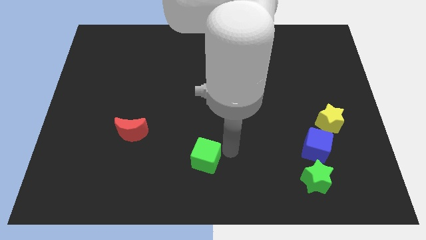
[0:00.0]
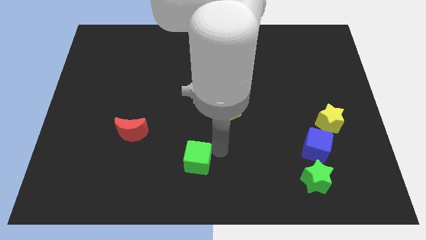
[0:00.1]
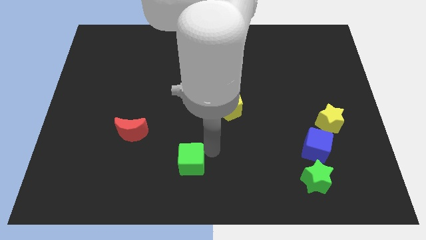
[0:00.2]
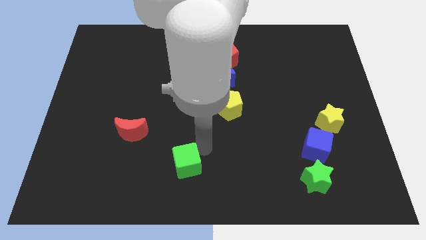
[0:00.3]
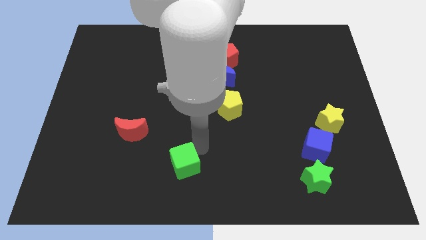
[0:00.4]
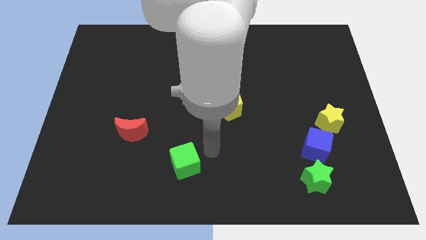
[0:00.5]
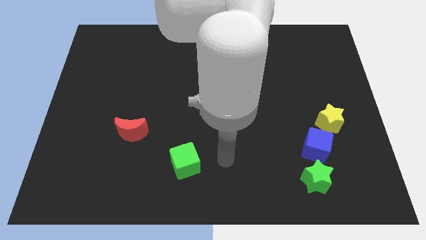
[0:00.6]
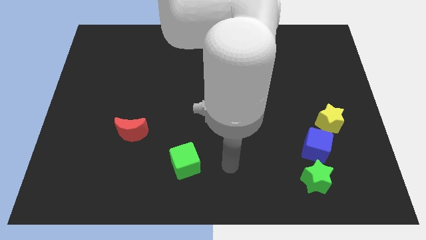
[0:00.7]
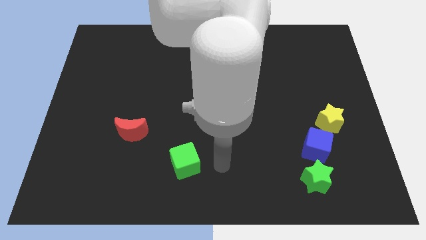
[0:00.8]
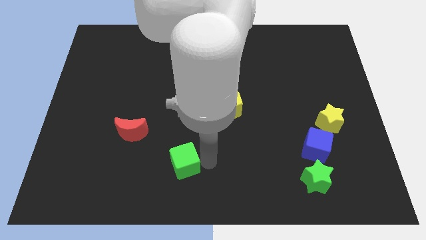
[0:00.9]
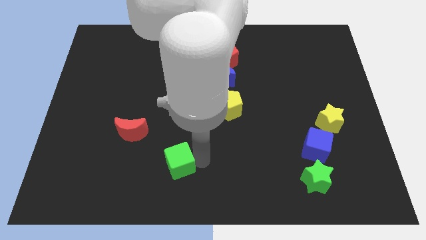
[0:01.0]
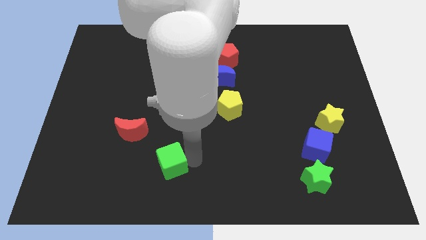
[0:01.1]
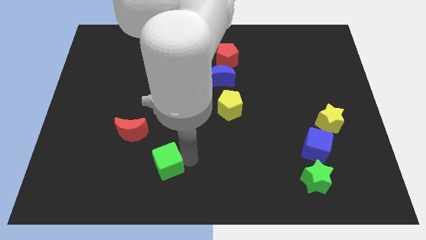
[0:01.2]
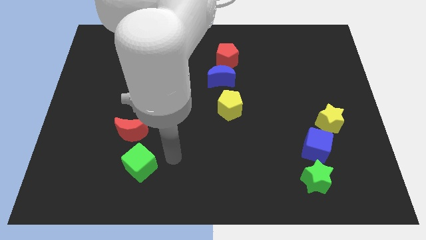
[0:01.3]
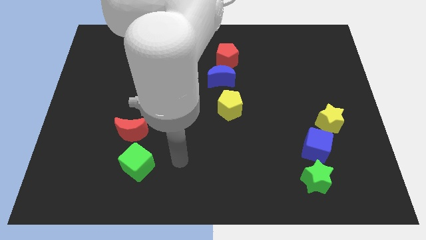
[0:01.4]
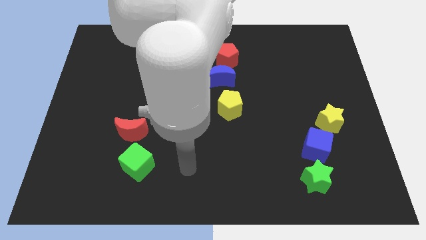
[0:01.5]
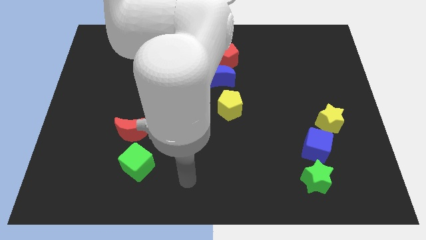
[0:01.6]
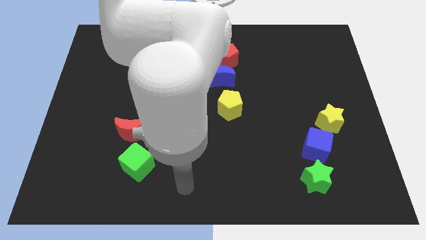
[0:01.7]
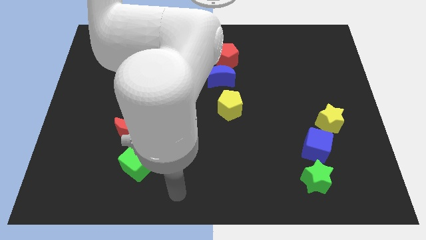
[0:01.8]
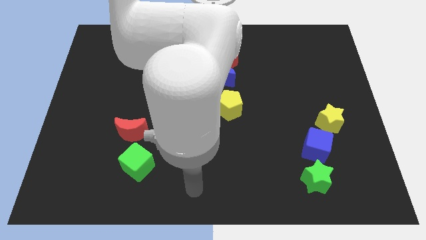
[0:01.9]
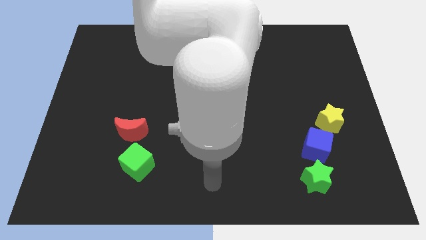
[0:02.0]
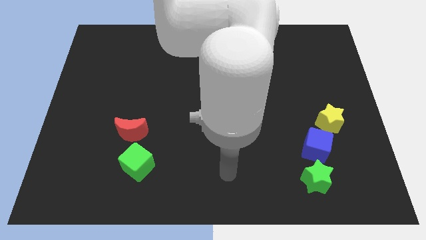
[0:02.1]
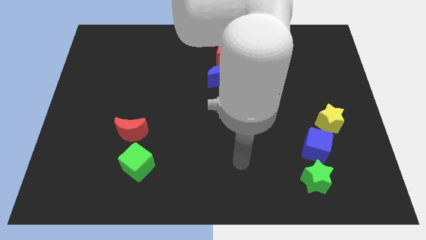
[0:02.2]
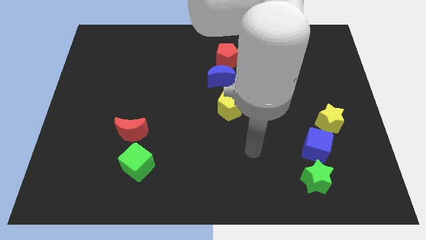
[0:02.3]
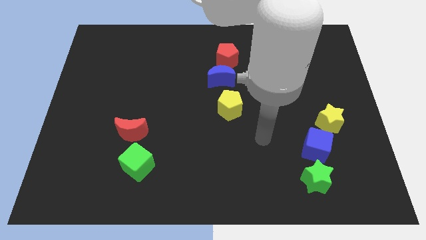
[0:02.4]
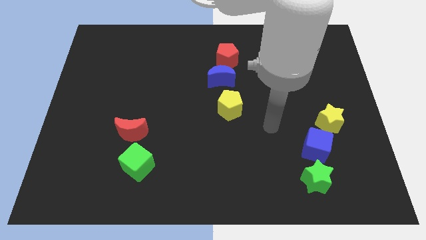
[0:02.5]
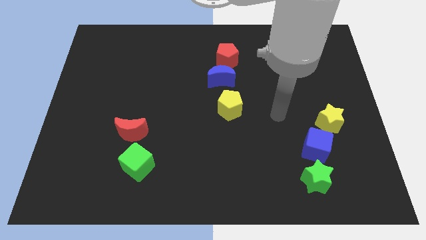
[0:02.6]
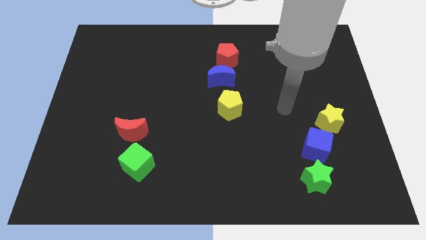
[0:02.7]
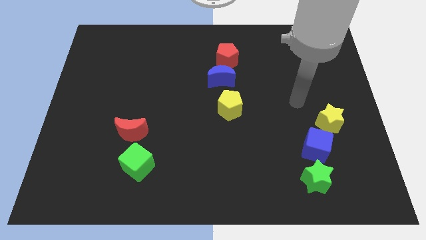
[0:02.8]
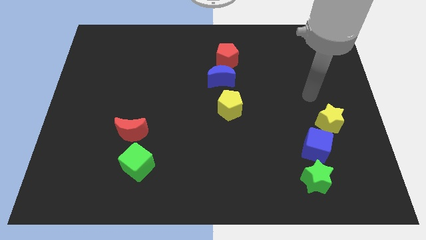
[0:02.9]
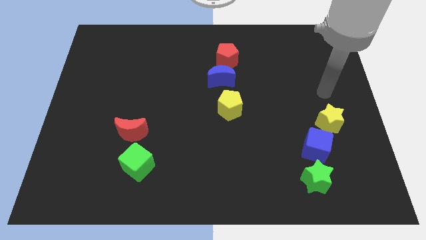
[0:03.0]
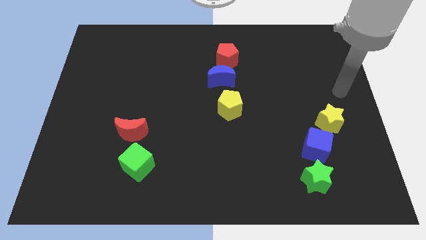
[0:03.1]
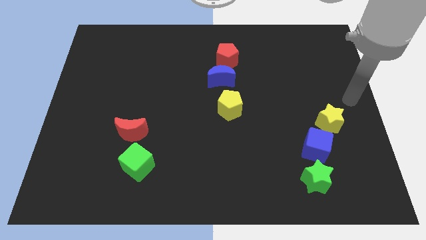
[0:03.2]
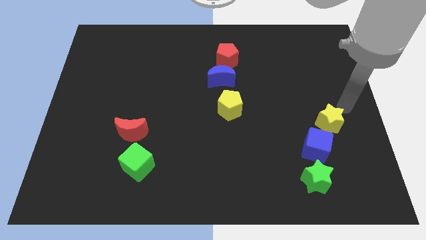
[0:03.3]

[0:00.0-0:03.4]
place green cube to the bottom of red moon

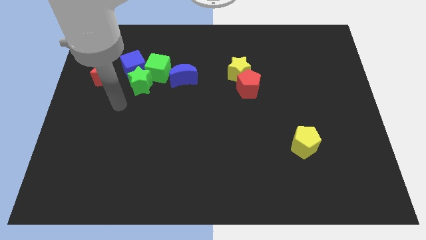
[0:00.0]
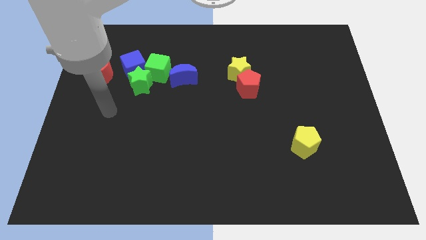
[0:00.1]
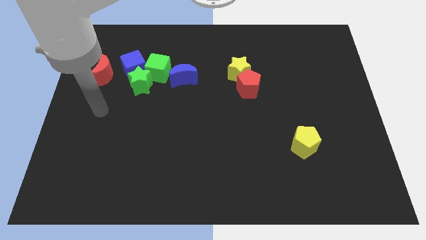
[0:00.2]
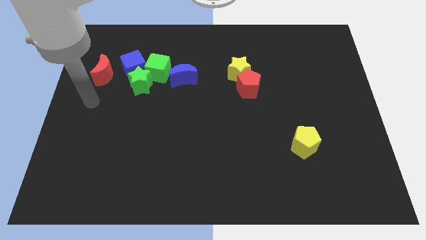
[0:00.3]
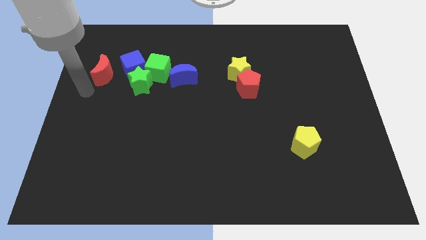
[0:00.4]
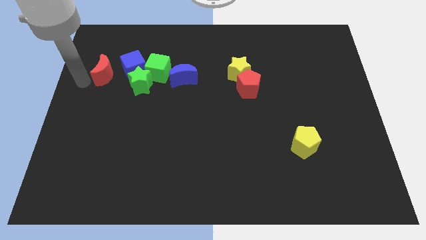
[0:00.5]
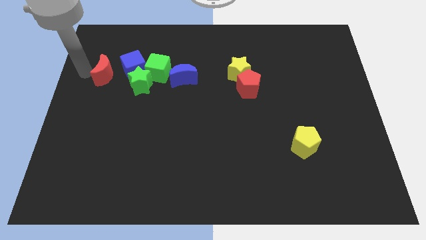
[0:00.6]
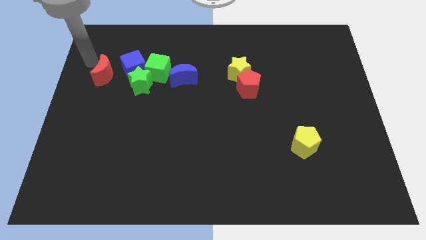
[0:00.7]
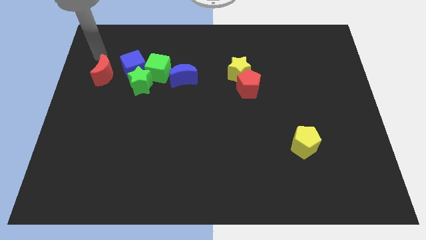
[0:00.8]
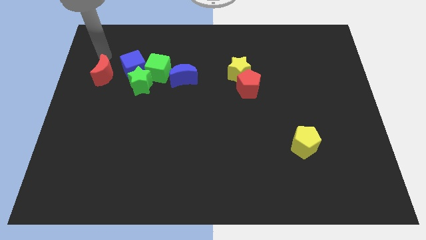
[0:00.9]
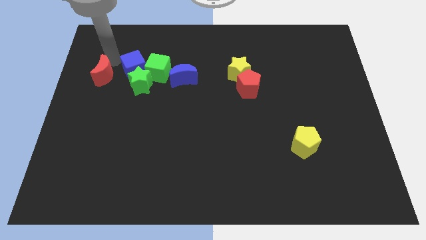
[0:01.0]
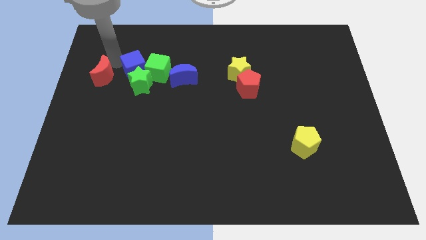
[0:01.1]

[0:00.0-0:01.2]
move your hand close to the blue cube

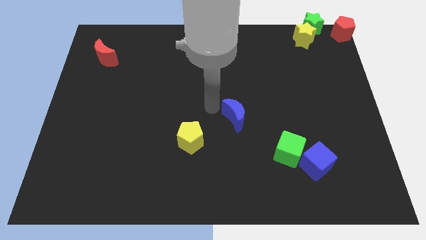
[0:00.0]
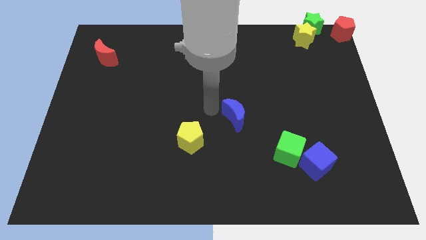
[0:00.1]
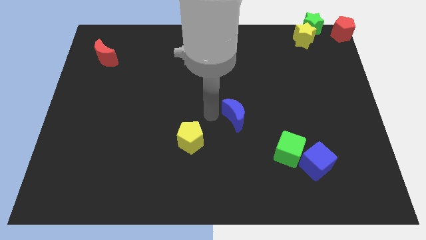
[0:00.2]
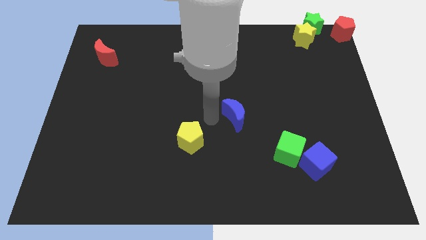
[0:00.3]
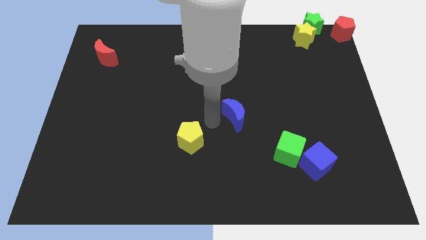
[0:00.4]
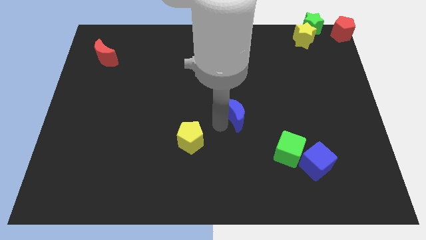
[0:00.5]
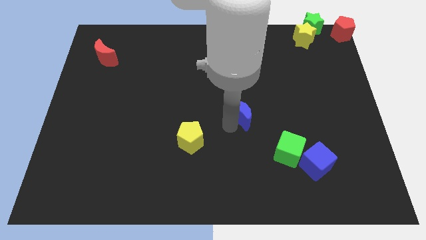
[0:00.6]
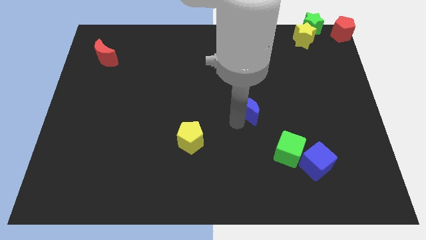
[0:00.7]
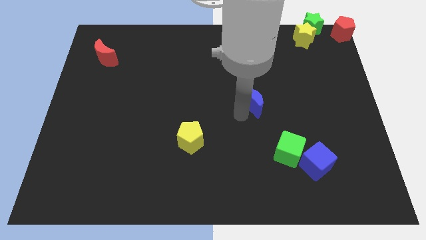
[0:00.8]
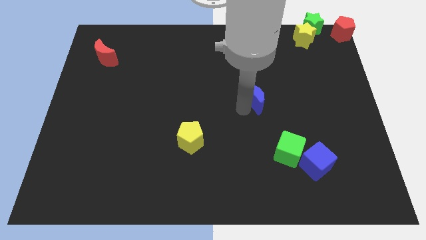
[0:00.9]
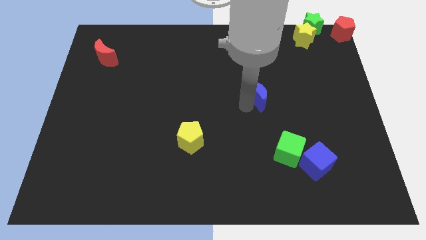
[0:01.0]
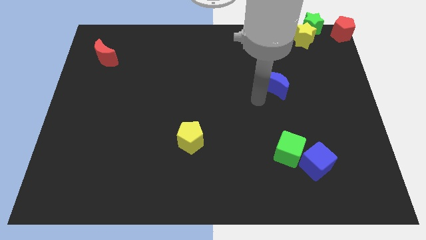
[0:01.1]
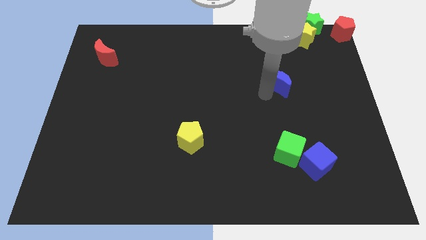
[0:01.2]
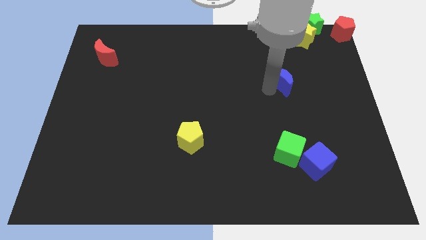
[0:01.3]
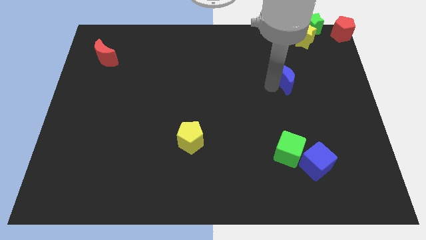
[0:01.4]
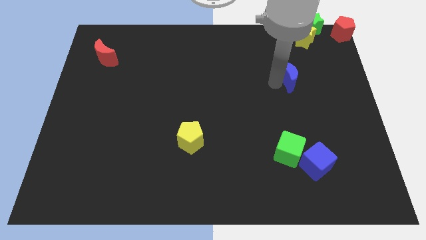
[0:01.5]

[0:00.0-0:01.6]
push the blue half moon towards the top right of the board

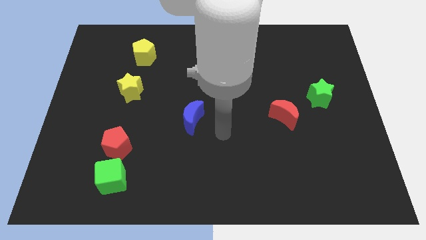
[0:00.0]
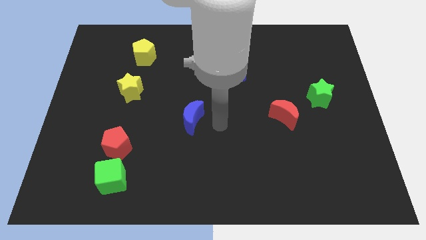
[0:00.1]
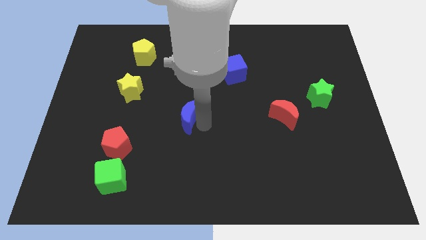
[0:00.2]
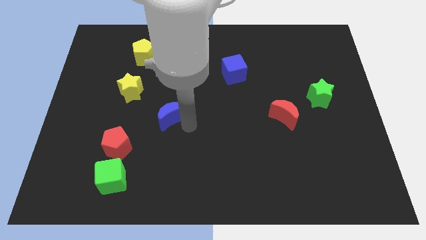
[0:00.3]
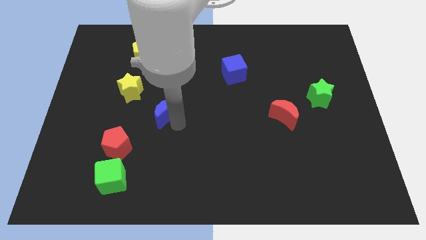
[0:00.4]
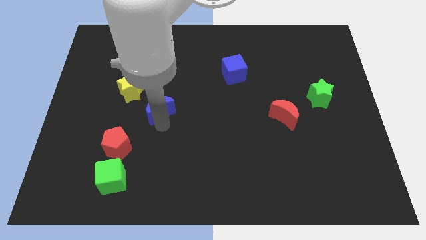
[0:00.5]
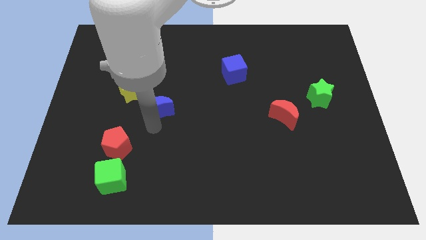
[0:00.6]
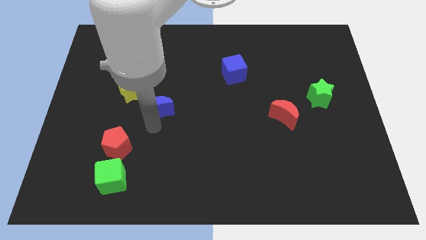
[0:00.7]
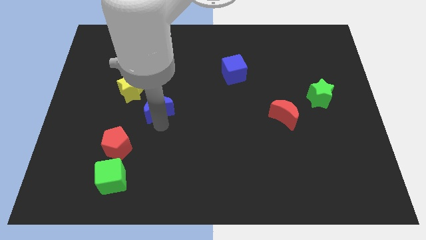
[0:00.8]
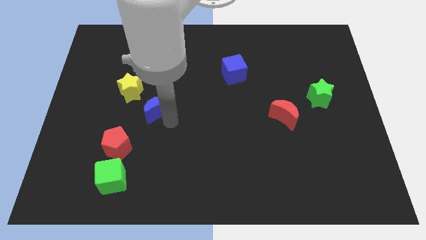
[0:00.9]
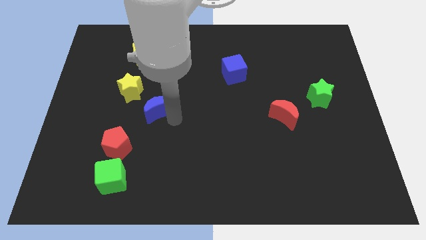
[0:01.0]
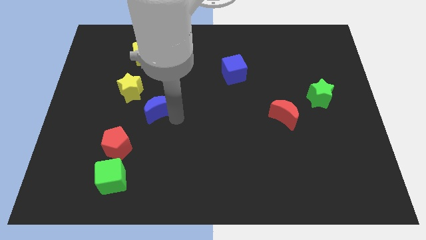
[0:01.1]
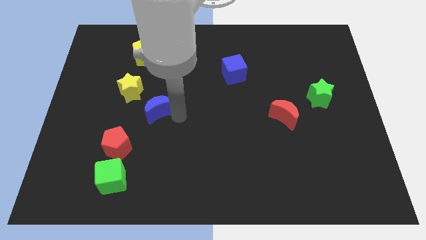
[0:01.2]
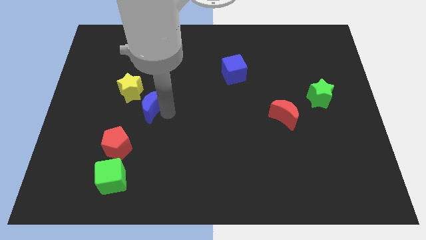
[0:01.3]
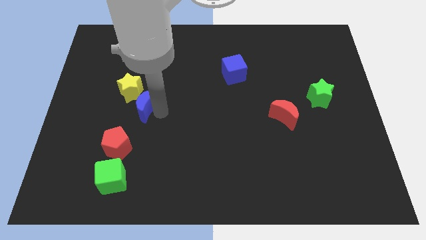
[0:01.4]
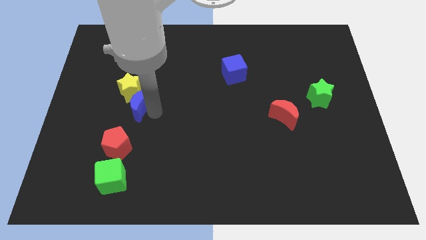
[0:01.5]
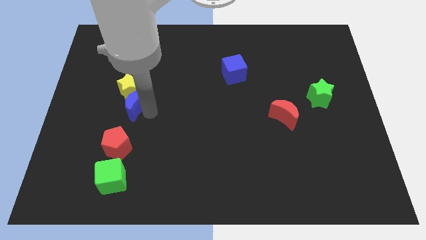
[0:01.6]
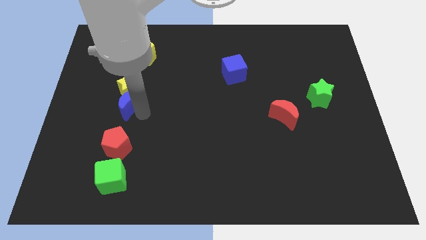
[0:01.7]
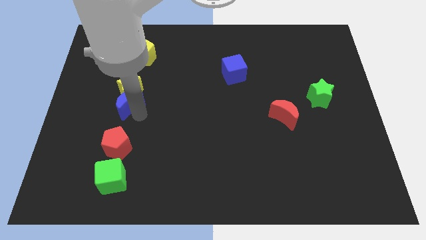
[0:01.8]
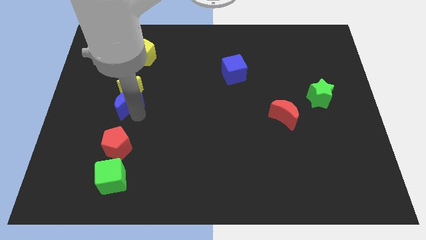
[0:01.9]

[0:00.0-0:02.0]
place the blue moon at the bottom of the yellow star

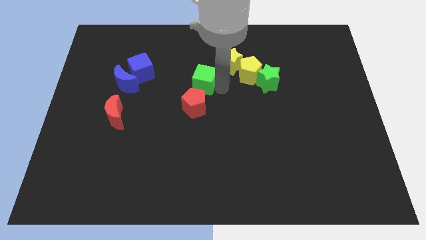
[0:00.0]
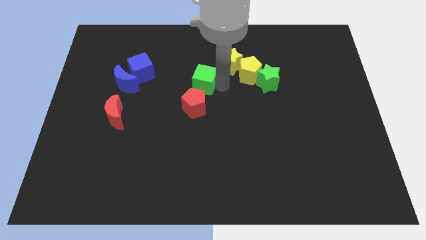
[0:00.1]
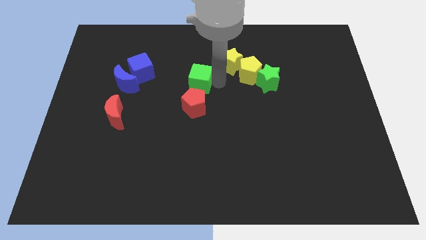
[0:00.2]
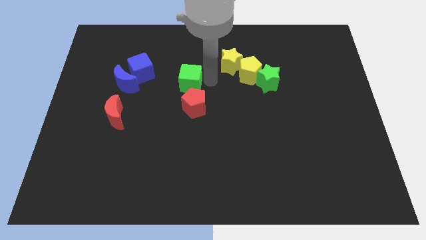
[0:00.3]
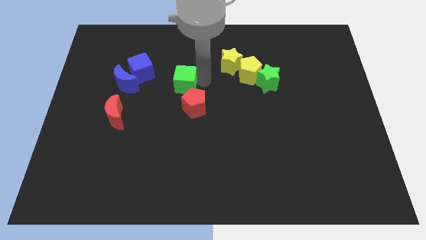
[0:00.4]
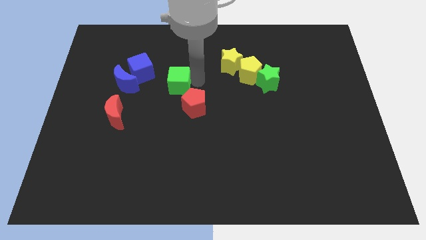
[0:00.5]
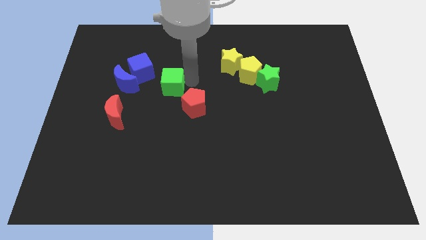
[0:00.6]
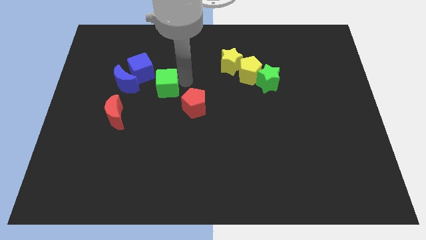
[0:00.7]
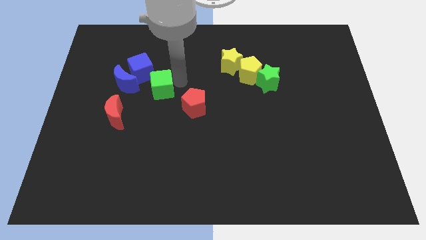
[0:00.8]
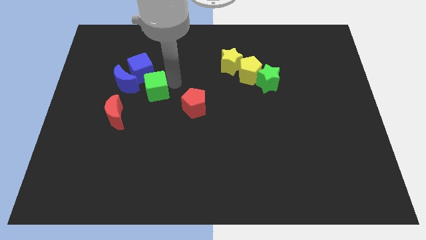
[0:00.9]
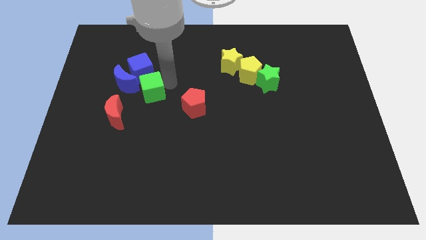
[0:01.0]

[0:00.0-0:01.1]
push the green cube in between the blue moon and red pentagon
